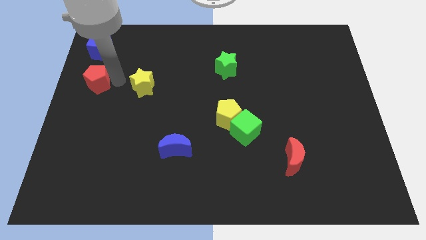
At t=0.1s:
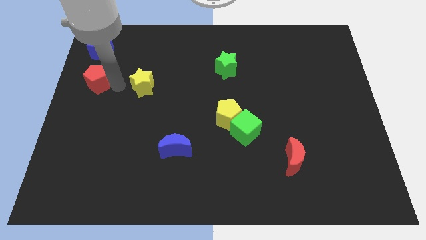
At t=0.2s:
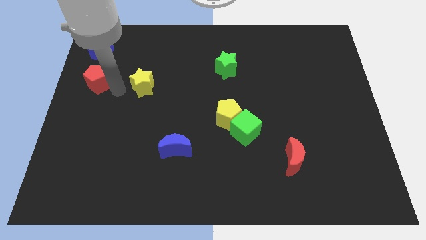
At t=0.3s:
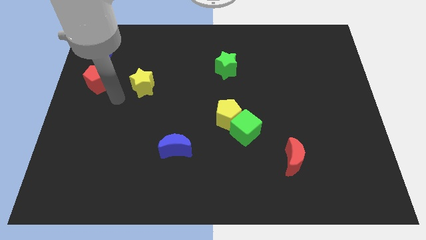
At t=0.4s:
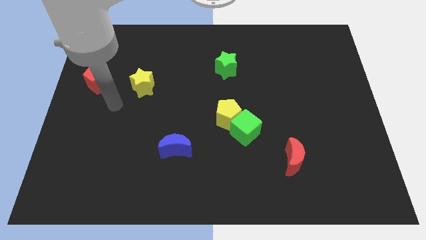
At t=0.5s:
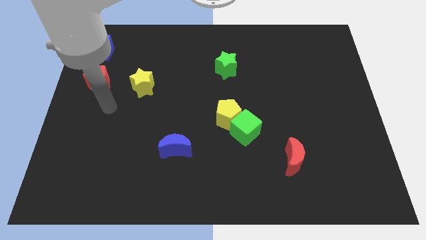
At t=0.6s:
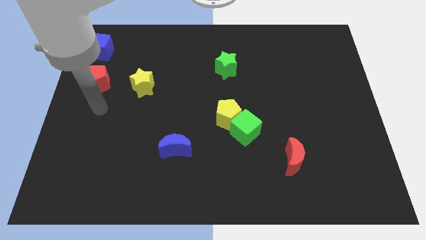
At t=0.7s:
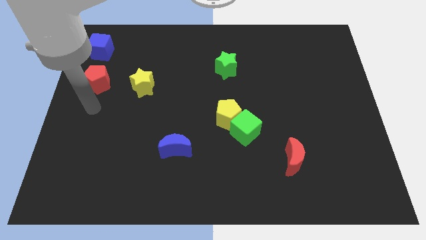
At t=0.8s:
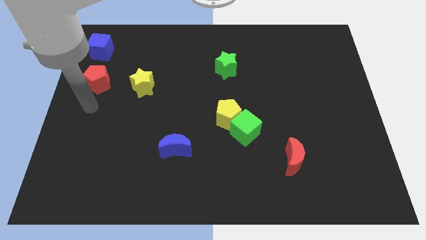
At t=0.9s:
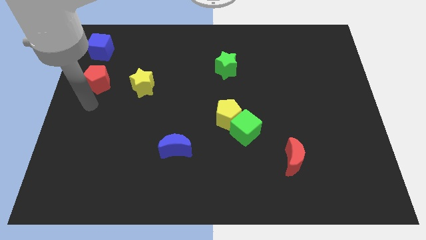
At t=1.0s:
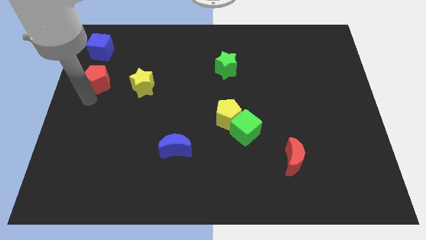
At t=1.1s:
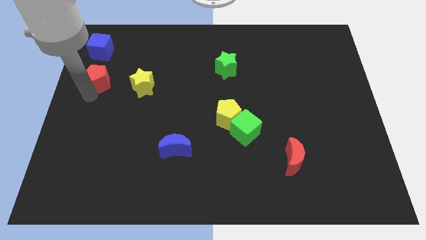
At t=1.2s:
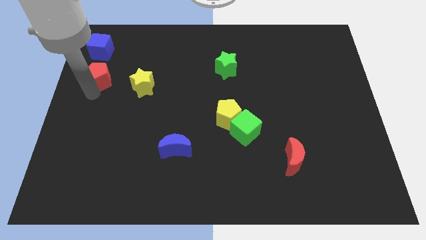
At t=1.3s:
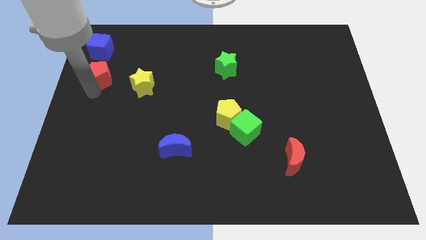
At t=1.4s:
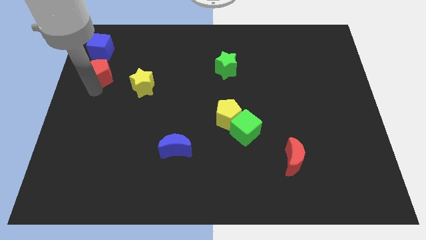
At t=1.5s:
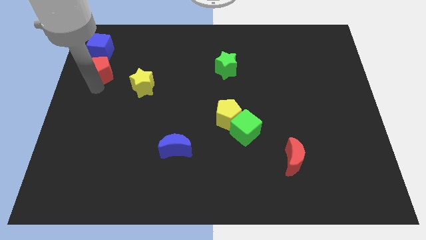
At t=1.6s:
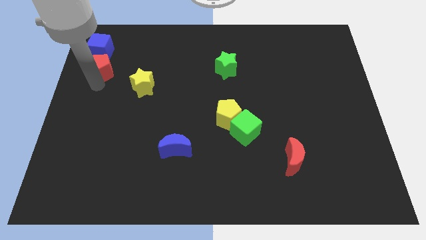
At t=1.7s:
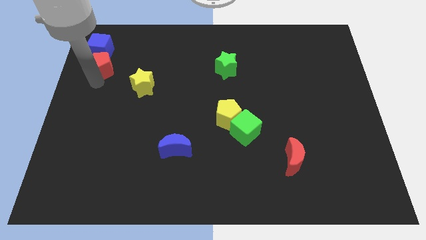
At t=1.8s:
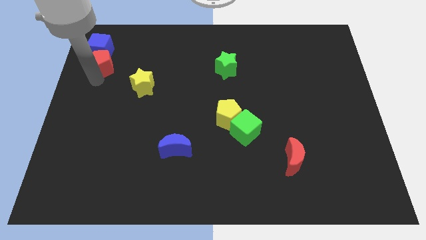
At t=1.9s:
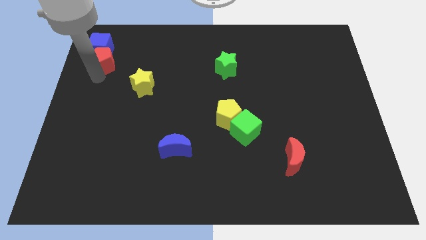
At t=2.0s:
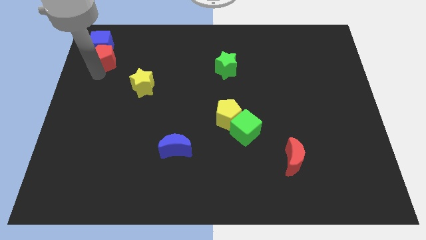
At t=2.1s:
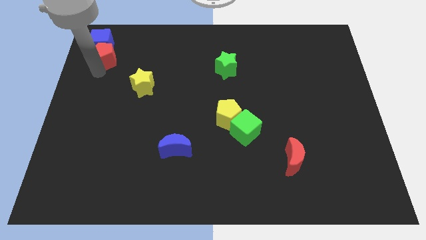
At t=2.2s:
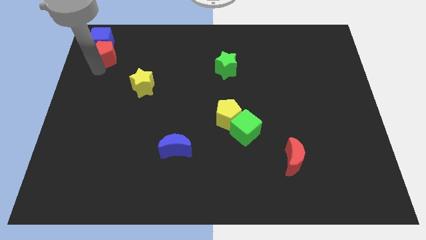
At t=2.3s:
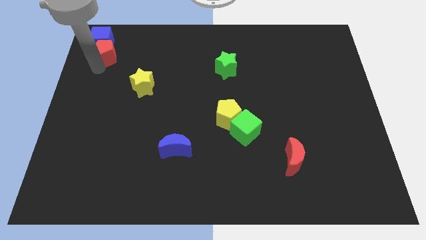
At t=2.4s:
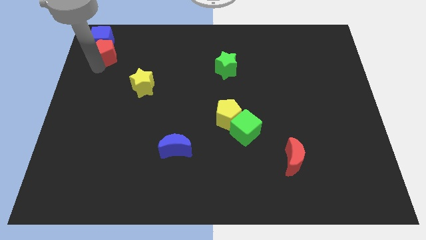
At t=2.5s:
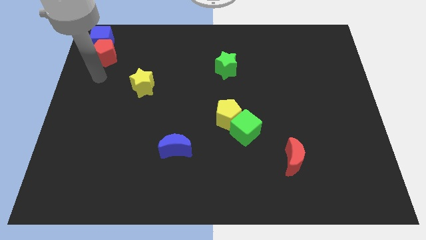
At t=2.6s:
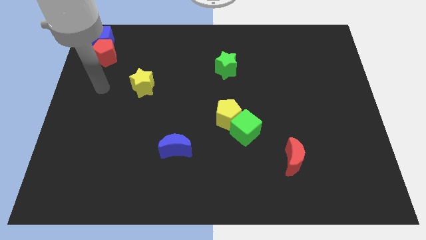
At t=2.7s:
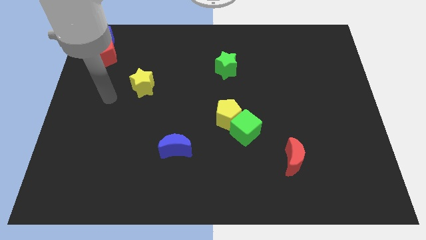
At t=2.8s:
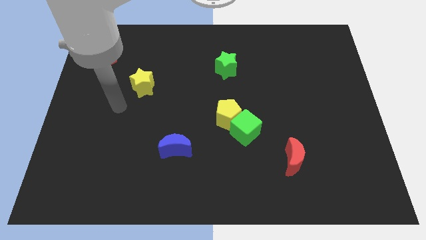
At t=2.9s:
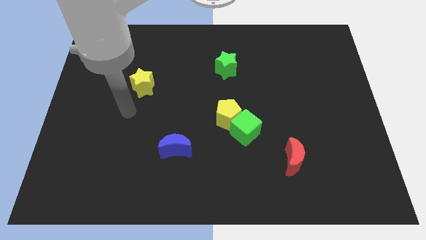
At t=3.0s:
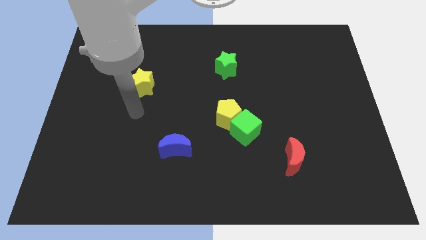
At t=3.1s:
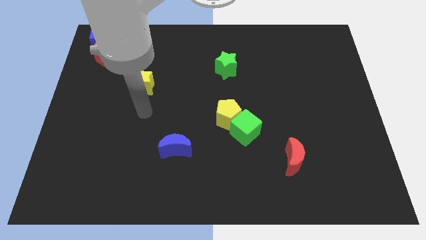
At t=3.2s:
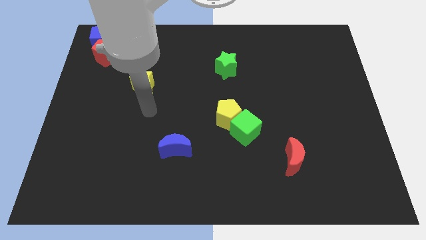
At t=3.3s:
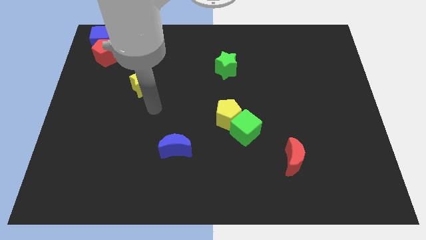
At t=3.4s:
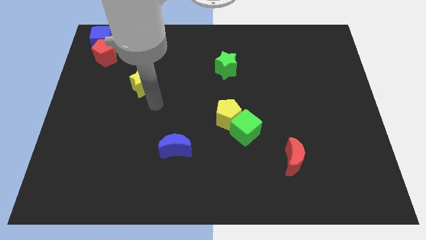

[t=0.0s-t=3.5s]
move the red pentagon into the blue cube

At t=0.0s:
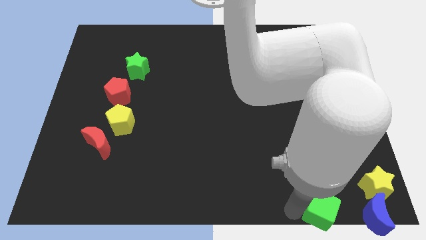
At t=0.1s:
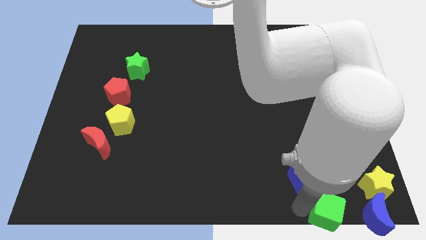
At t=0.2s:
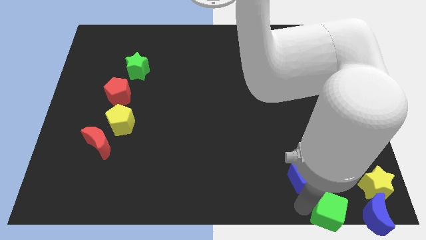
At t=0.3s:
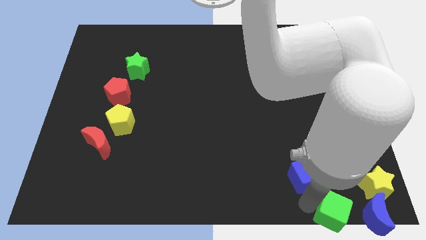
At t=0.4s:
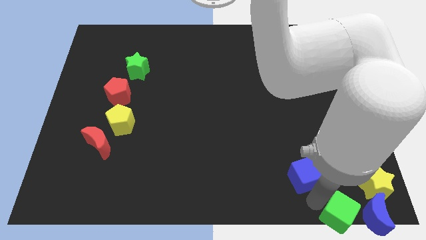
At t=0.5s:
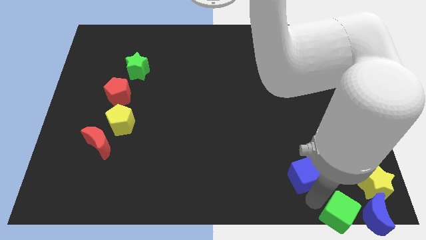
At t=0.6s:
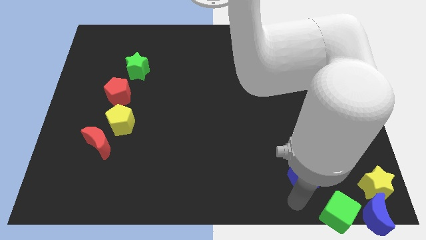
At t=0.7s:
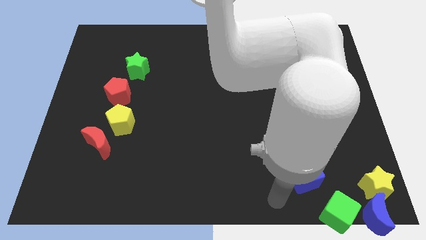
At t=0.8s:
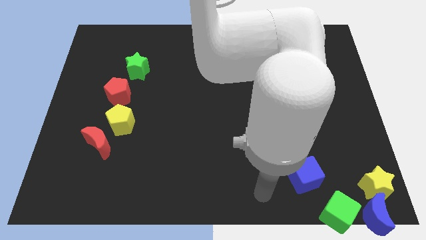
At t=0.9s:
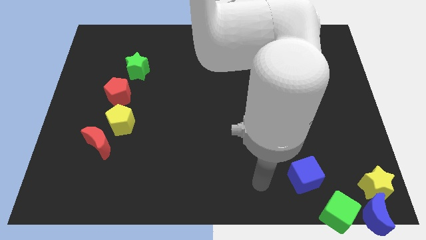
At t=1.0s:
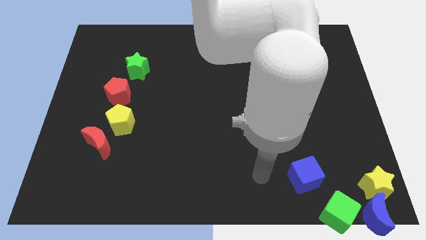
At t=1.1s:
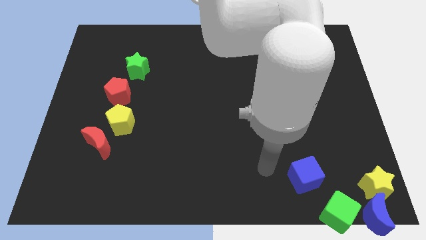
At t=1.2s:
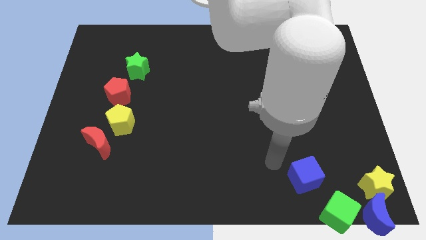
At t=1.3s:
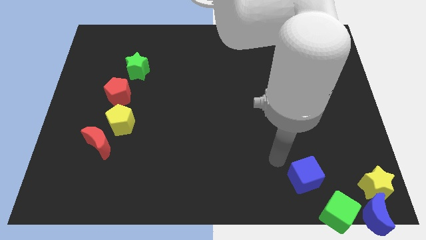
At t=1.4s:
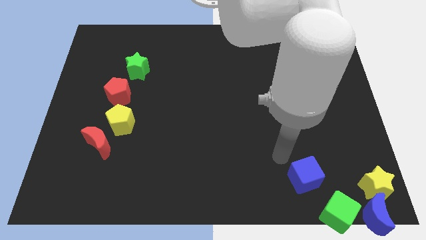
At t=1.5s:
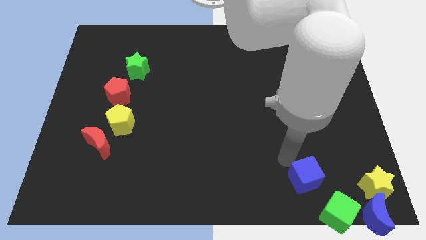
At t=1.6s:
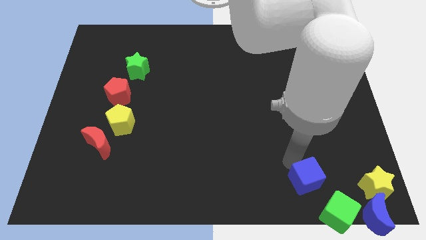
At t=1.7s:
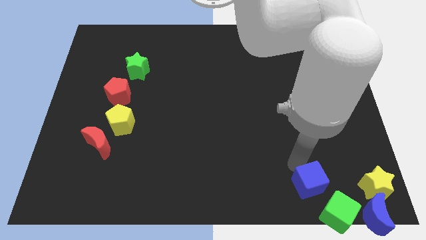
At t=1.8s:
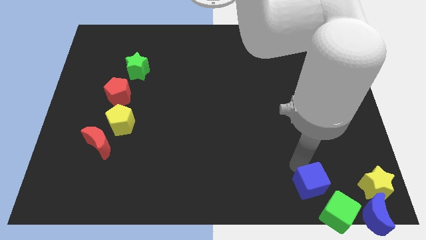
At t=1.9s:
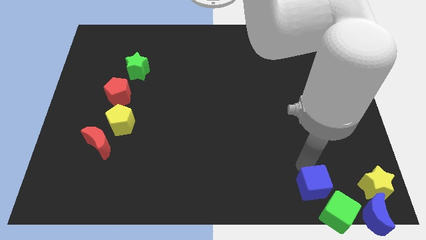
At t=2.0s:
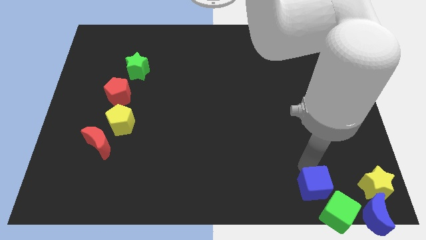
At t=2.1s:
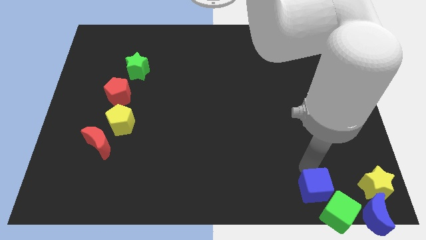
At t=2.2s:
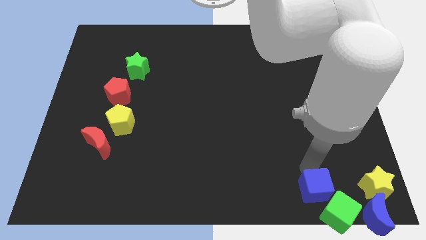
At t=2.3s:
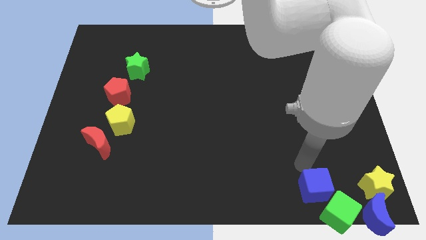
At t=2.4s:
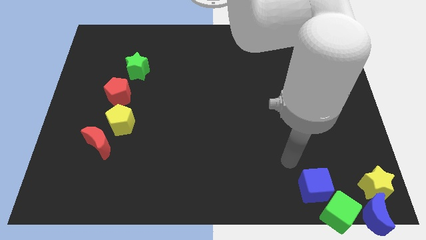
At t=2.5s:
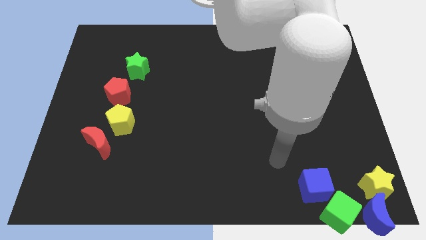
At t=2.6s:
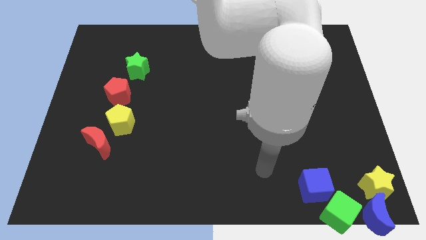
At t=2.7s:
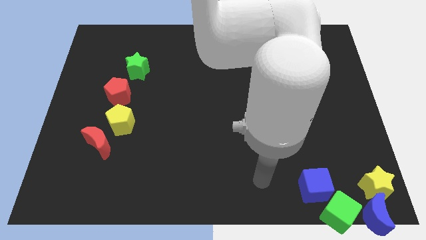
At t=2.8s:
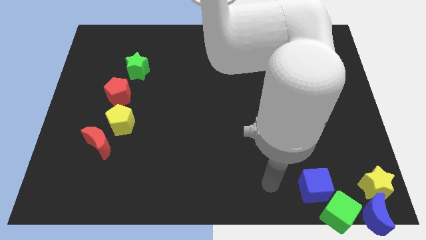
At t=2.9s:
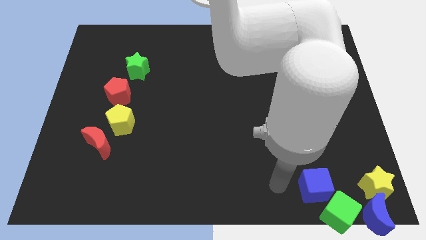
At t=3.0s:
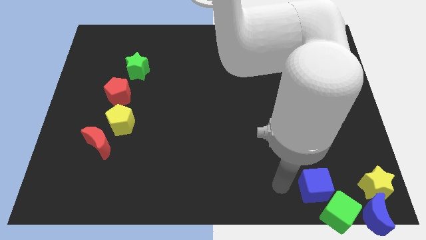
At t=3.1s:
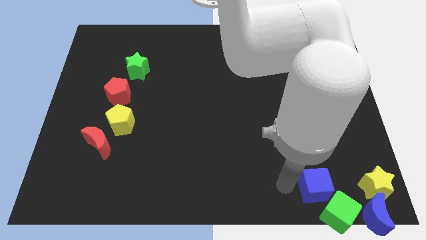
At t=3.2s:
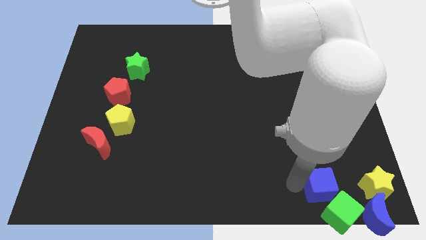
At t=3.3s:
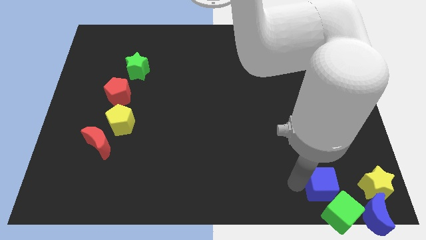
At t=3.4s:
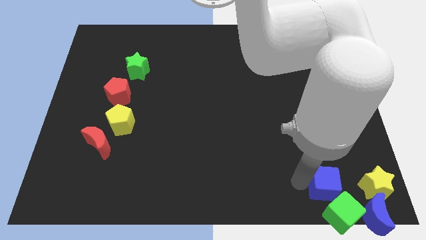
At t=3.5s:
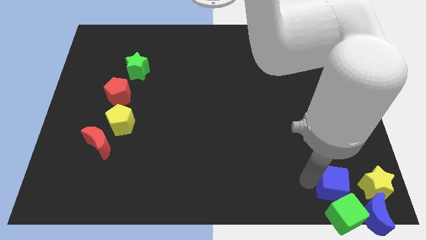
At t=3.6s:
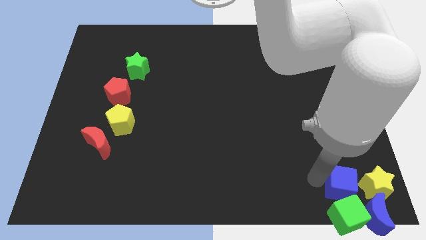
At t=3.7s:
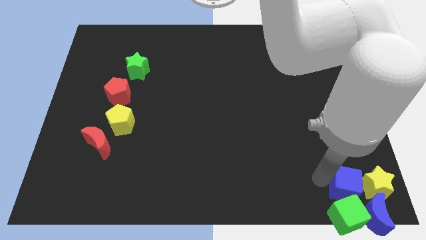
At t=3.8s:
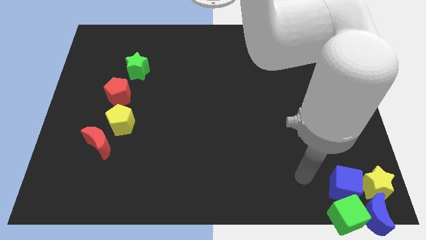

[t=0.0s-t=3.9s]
adjust the cubes at the bottom right of the board

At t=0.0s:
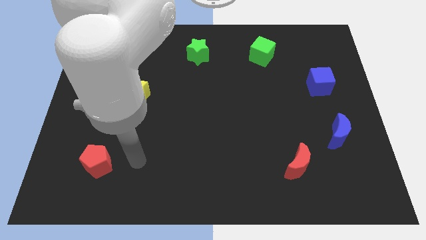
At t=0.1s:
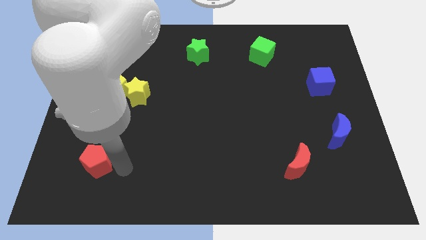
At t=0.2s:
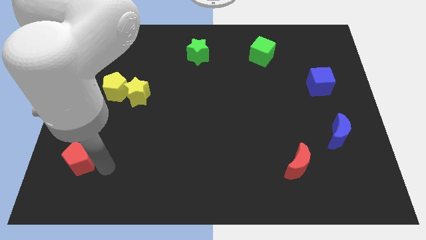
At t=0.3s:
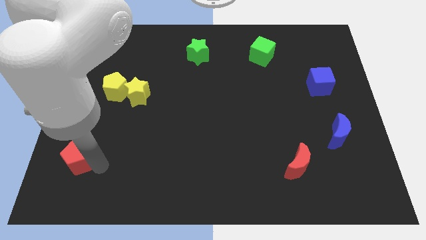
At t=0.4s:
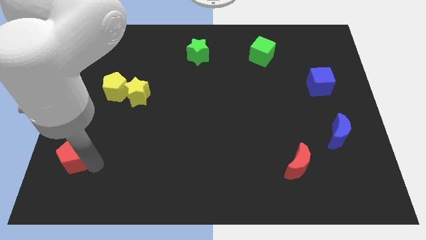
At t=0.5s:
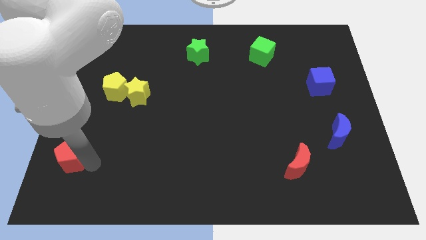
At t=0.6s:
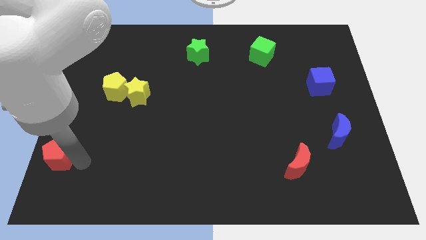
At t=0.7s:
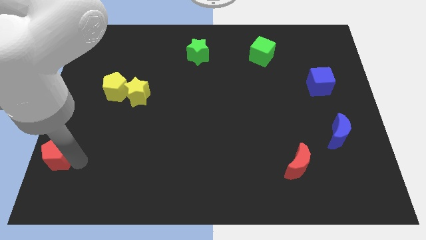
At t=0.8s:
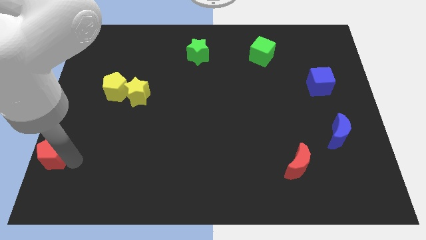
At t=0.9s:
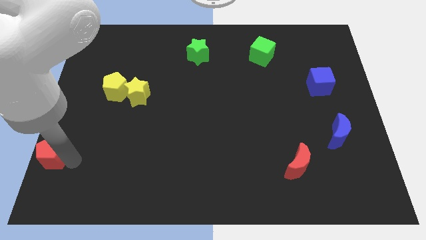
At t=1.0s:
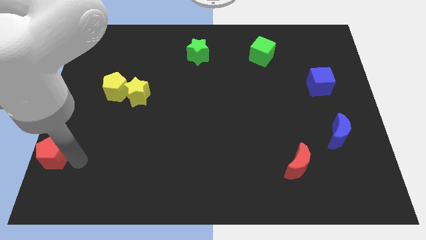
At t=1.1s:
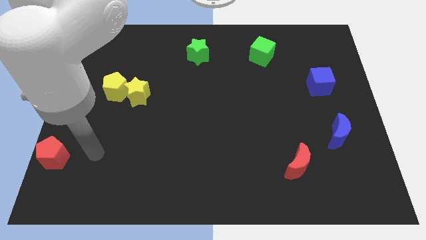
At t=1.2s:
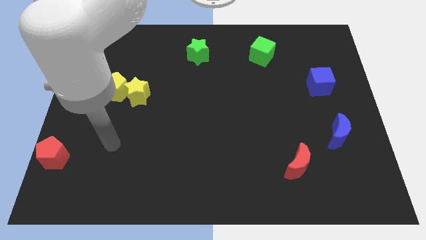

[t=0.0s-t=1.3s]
move red pentagon slightly to left
